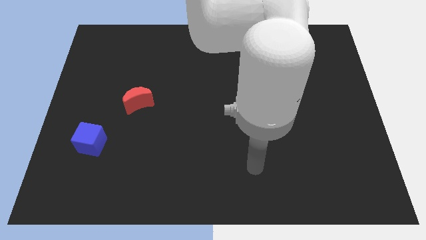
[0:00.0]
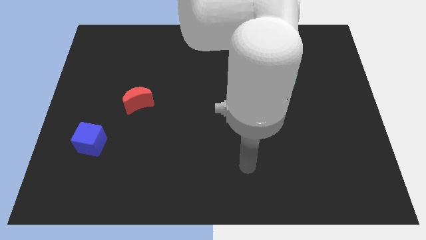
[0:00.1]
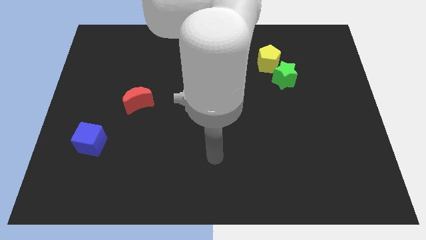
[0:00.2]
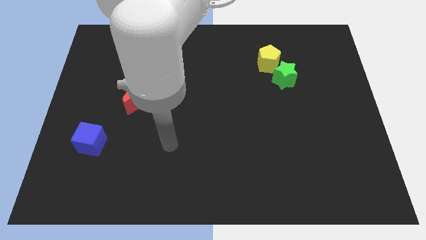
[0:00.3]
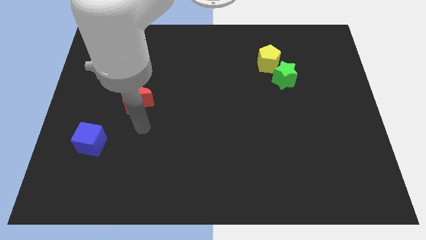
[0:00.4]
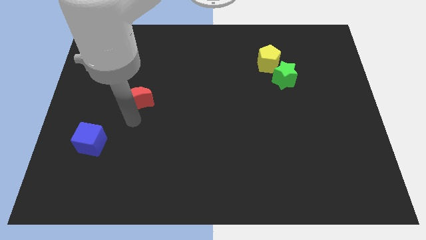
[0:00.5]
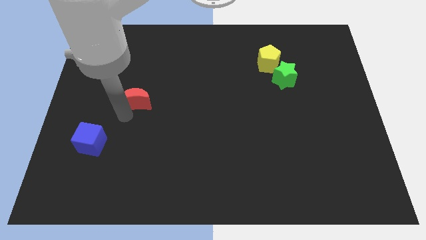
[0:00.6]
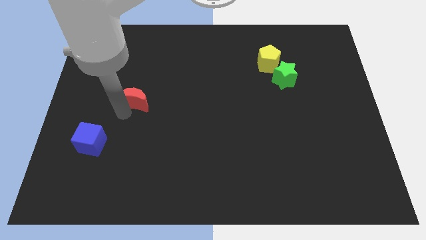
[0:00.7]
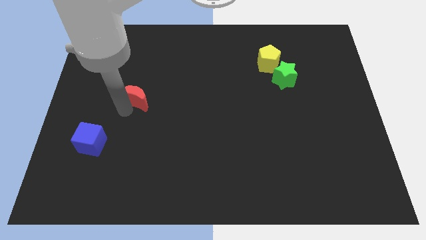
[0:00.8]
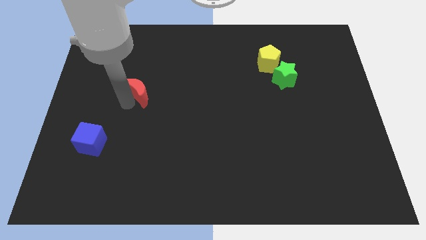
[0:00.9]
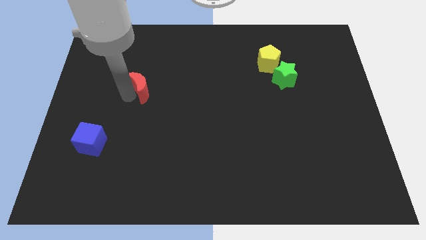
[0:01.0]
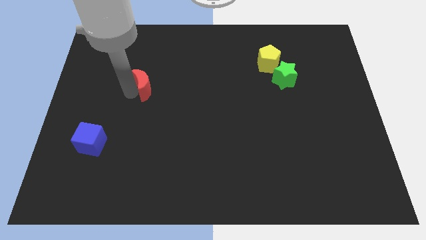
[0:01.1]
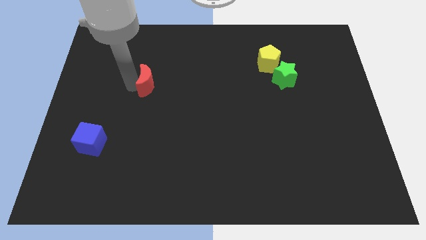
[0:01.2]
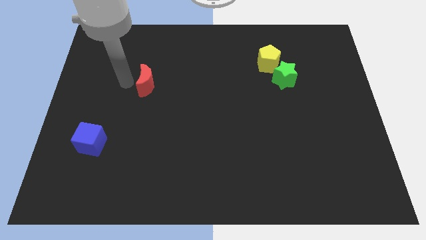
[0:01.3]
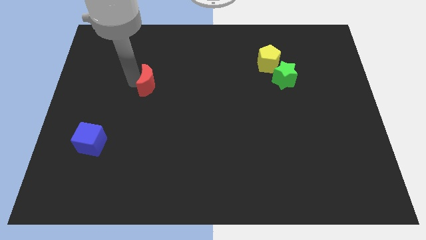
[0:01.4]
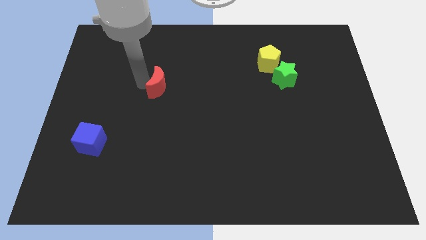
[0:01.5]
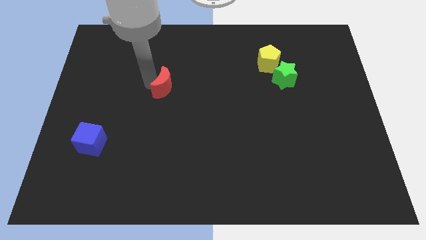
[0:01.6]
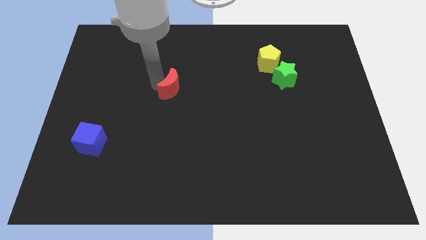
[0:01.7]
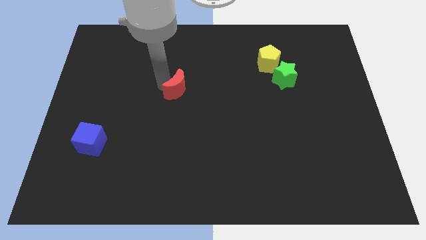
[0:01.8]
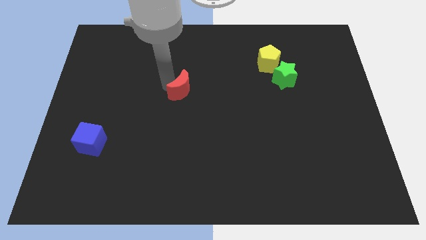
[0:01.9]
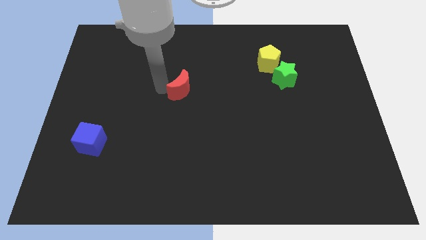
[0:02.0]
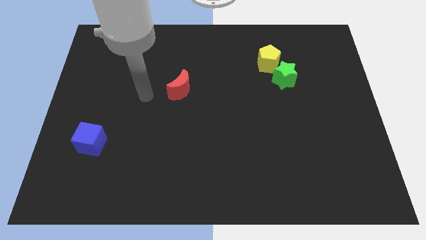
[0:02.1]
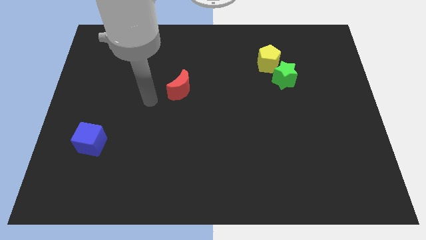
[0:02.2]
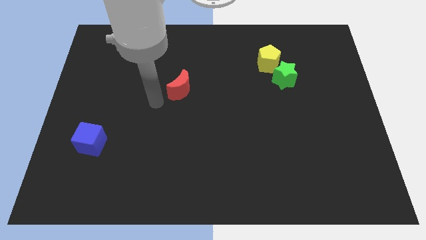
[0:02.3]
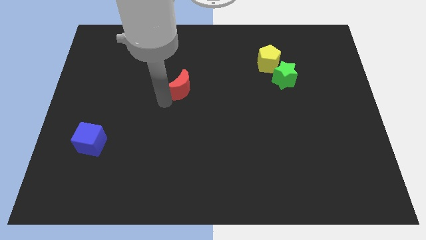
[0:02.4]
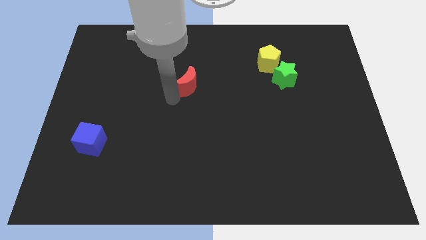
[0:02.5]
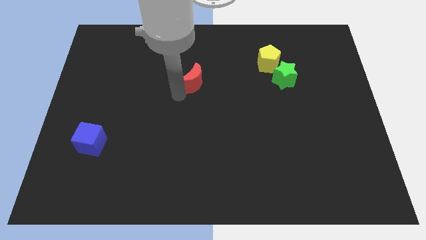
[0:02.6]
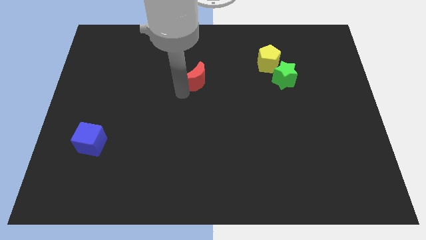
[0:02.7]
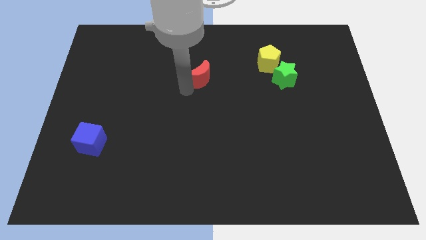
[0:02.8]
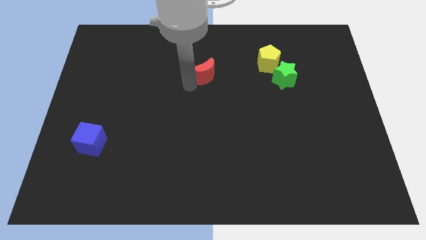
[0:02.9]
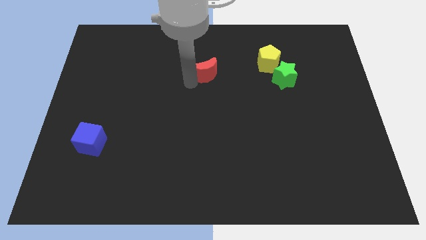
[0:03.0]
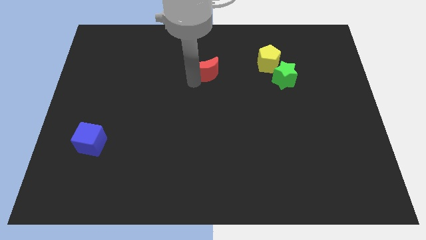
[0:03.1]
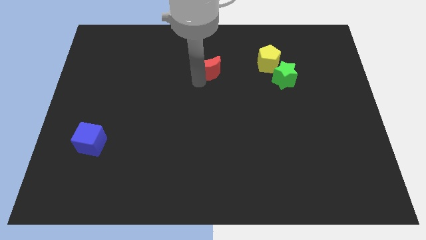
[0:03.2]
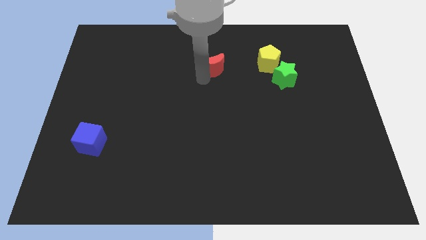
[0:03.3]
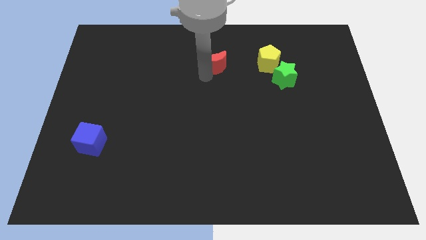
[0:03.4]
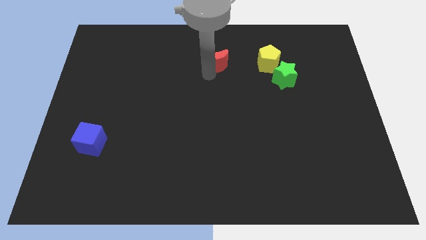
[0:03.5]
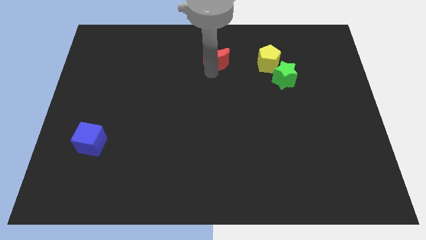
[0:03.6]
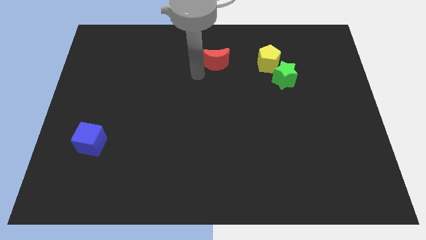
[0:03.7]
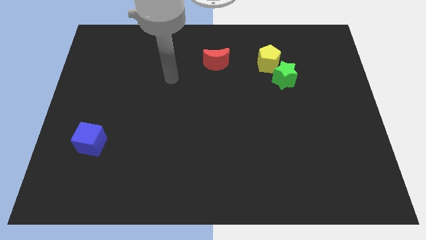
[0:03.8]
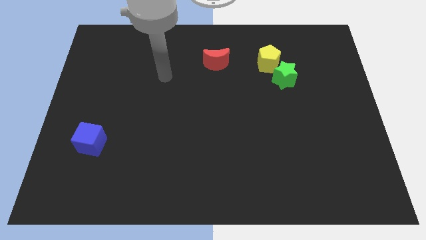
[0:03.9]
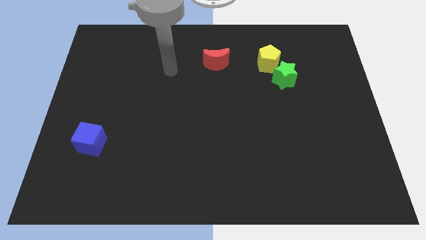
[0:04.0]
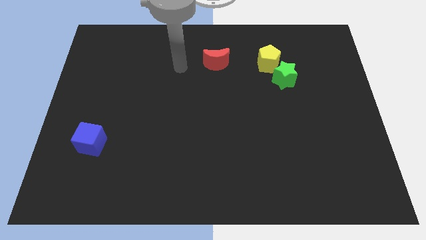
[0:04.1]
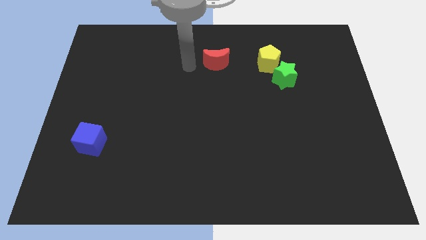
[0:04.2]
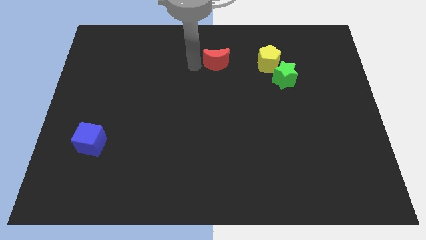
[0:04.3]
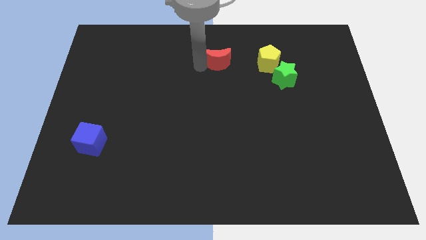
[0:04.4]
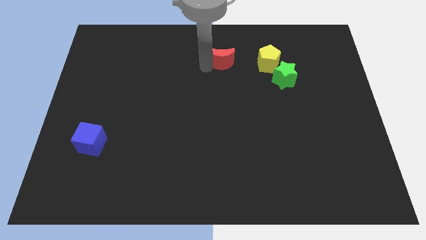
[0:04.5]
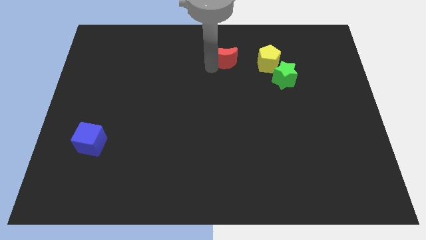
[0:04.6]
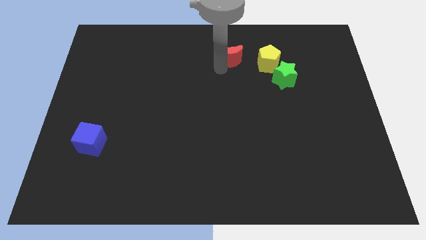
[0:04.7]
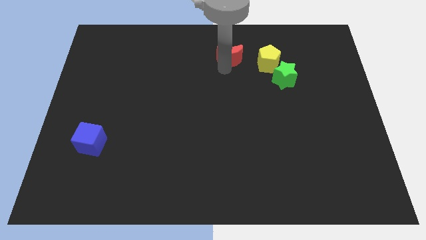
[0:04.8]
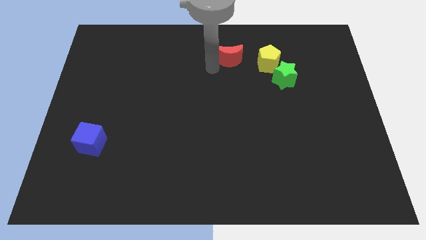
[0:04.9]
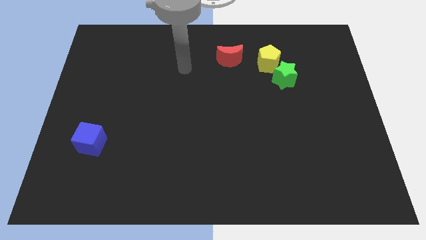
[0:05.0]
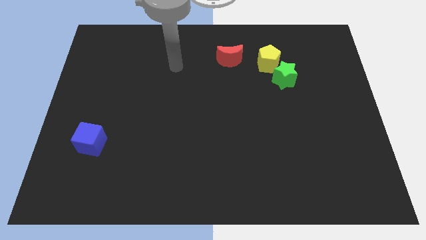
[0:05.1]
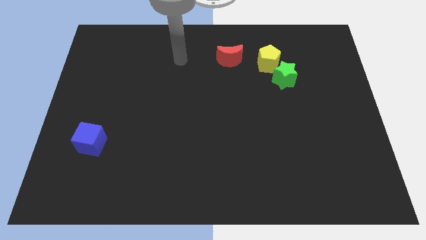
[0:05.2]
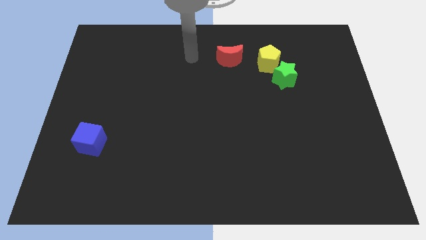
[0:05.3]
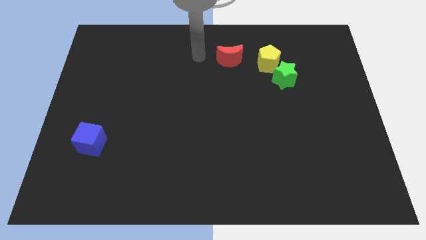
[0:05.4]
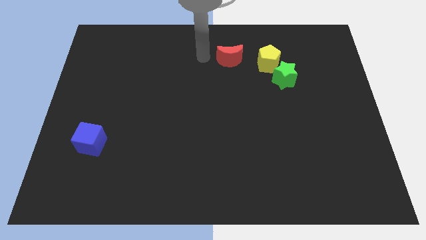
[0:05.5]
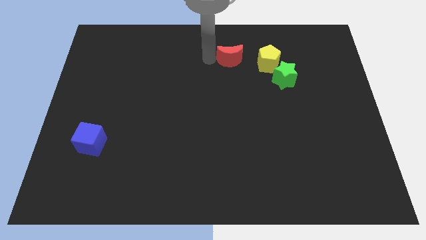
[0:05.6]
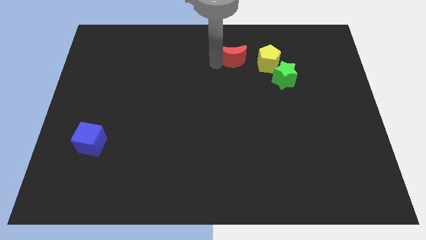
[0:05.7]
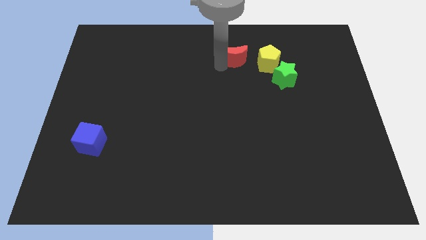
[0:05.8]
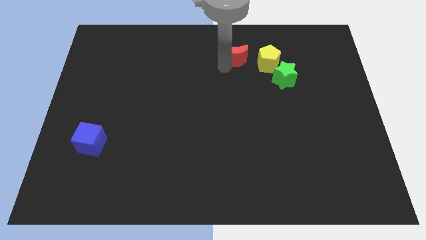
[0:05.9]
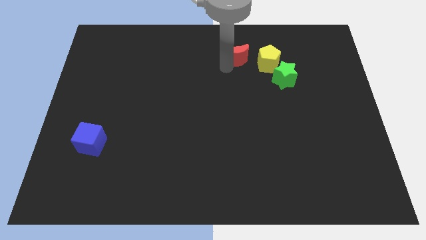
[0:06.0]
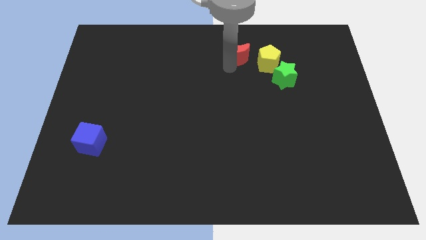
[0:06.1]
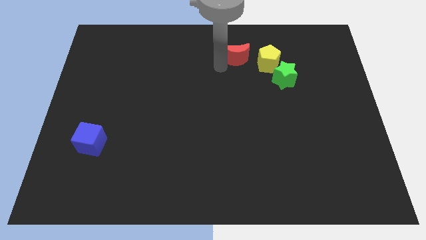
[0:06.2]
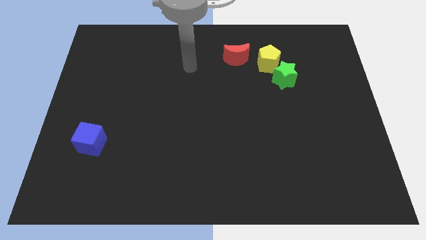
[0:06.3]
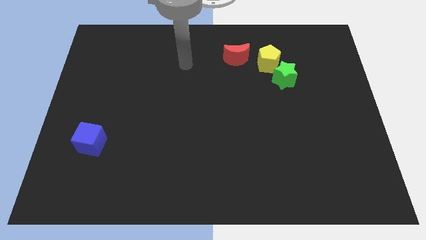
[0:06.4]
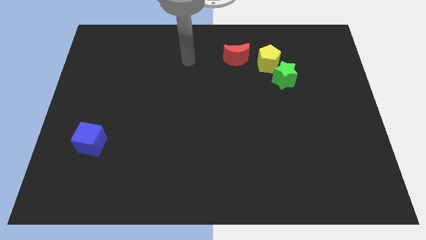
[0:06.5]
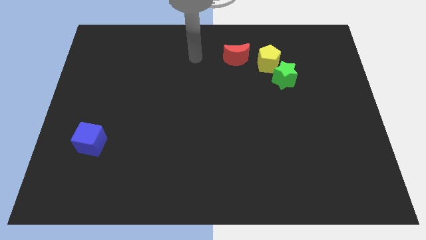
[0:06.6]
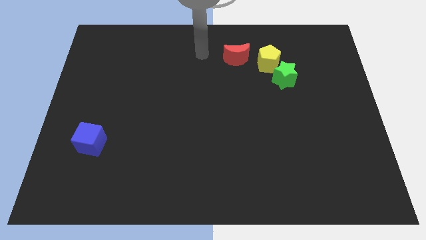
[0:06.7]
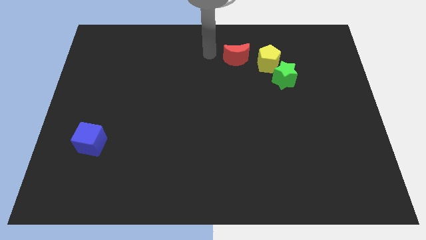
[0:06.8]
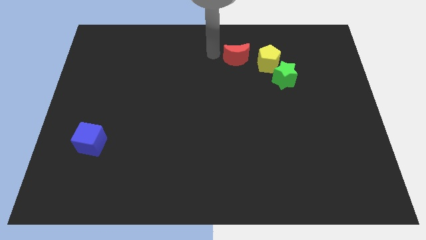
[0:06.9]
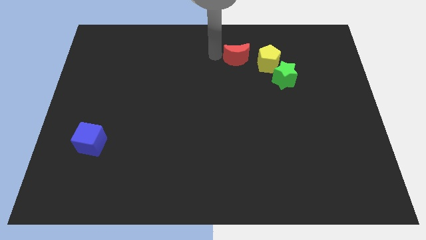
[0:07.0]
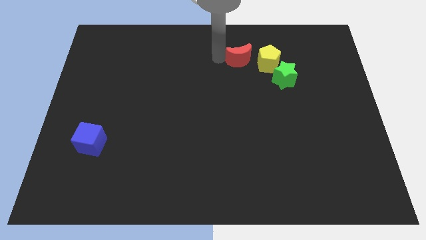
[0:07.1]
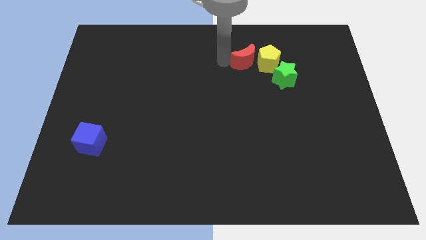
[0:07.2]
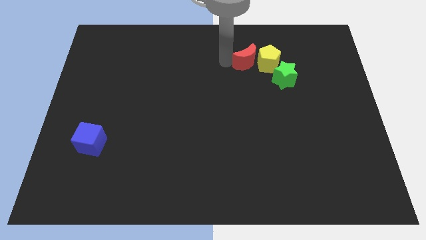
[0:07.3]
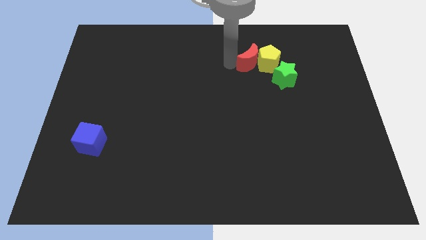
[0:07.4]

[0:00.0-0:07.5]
push the red moon close to the pentagon

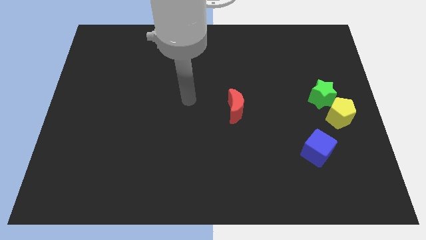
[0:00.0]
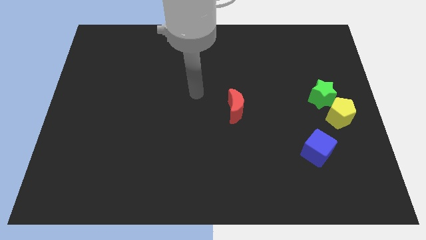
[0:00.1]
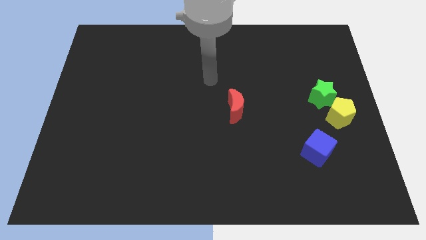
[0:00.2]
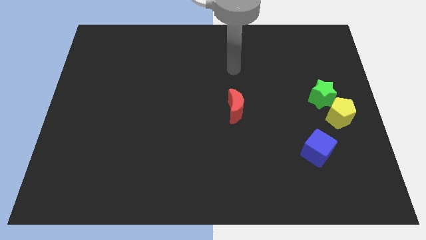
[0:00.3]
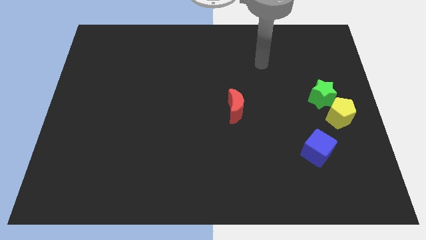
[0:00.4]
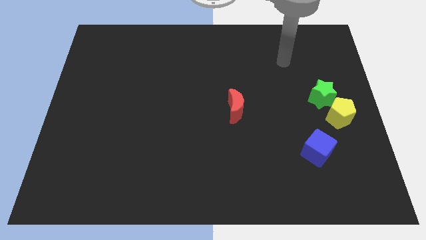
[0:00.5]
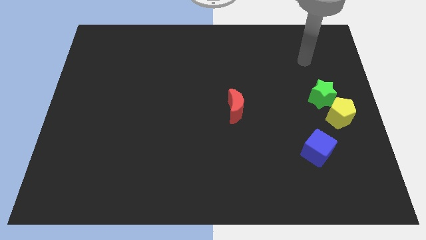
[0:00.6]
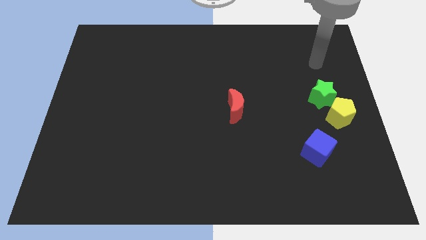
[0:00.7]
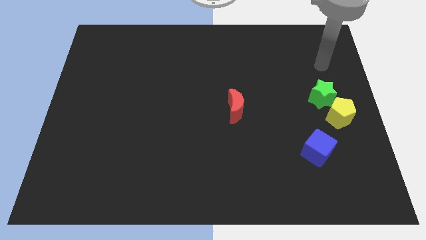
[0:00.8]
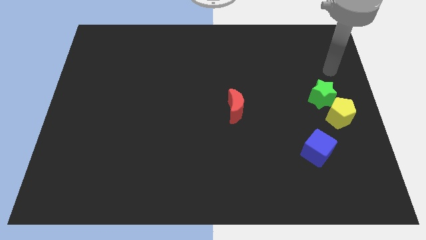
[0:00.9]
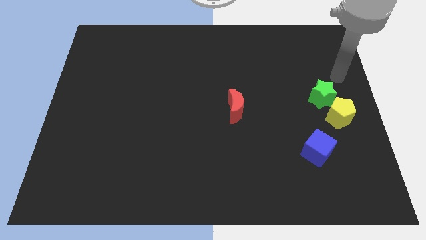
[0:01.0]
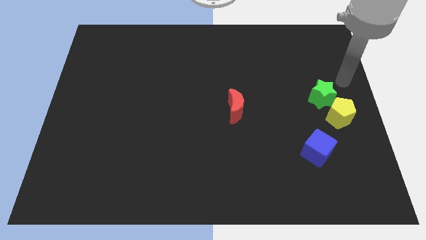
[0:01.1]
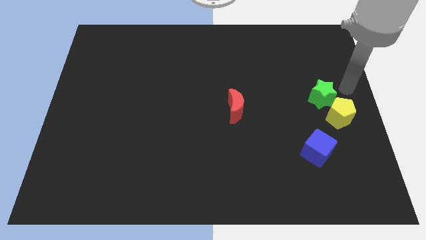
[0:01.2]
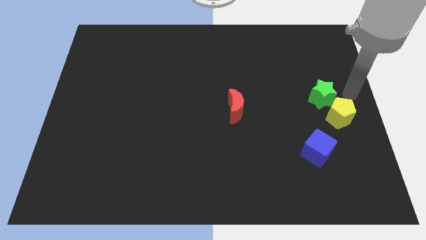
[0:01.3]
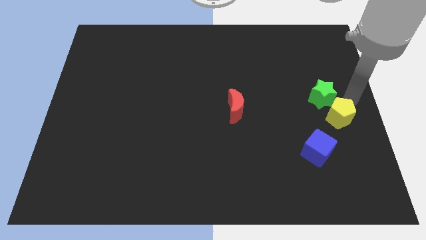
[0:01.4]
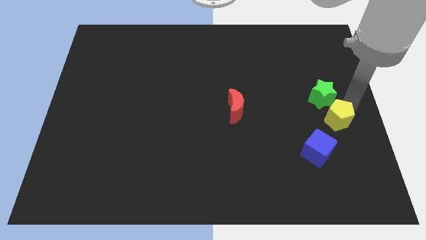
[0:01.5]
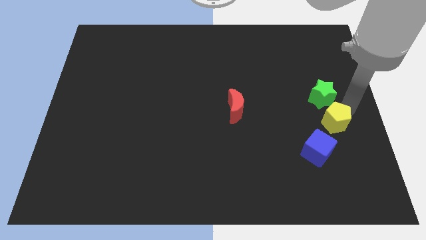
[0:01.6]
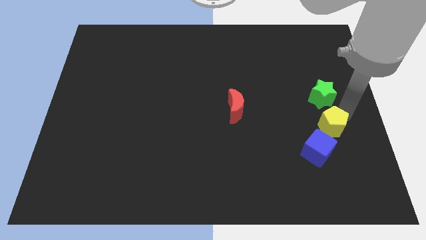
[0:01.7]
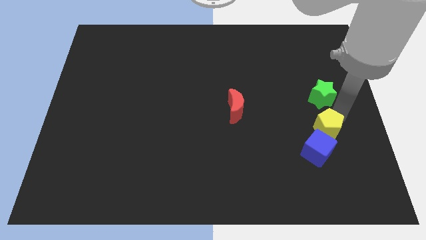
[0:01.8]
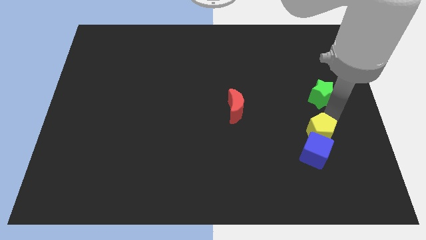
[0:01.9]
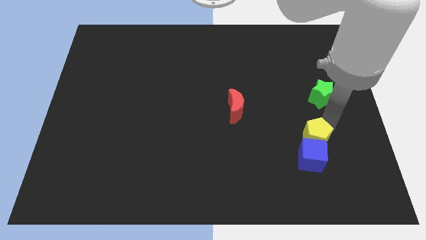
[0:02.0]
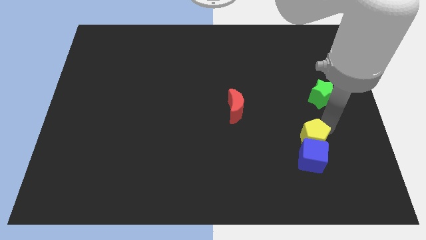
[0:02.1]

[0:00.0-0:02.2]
slide the yellow block towards the blue block
